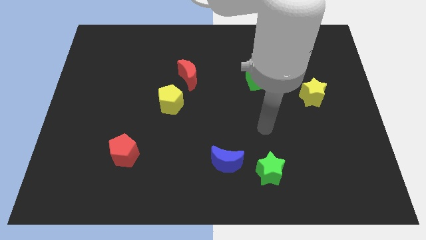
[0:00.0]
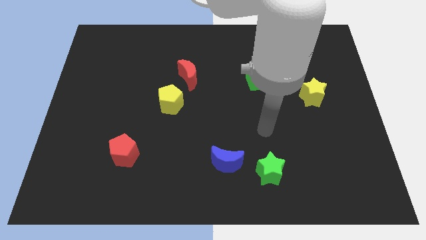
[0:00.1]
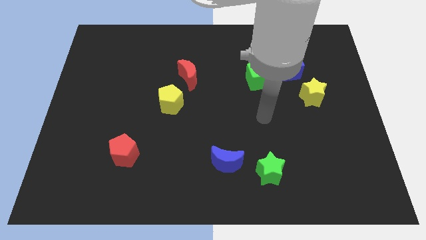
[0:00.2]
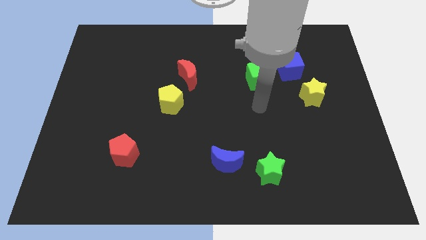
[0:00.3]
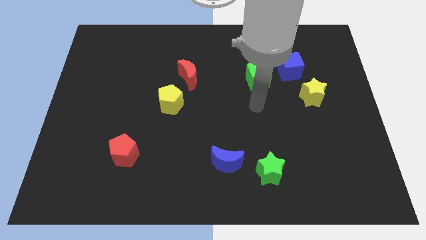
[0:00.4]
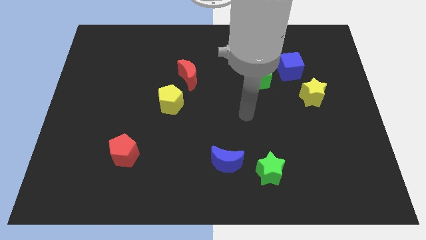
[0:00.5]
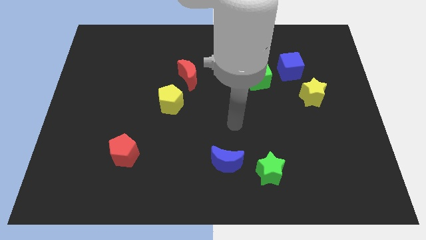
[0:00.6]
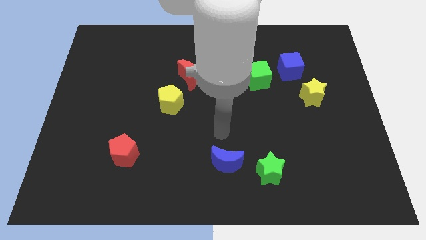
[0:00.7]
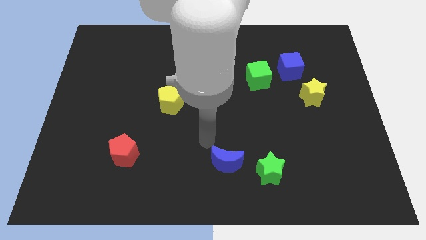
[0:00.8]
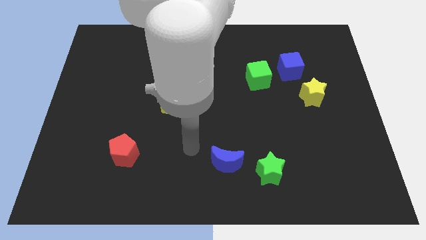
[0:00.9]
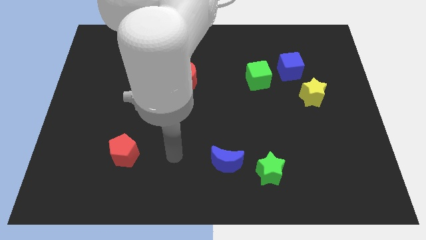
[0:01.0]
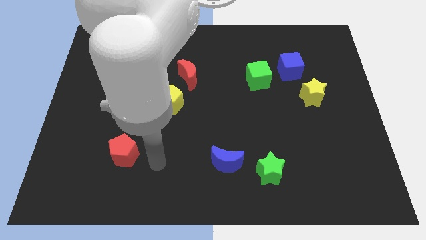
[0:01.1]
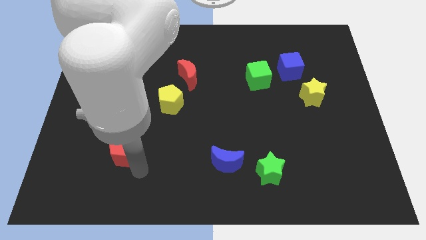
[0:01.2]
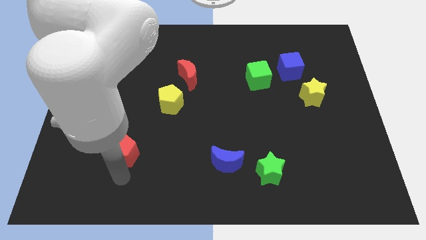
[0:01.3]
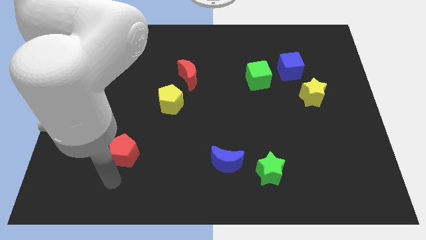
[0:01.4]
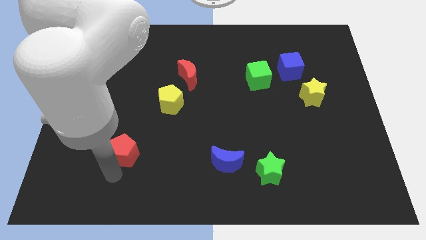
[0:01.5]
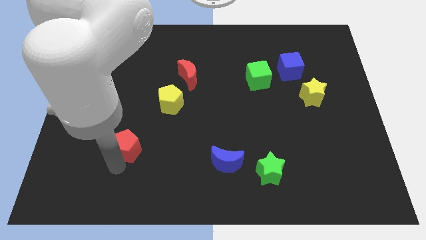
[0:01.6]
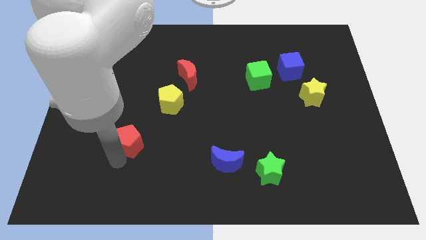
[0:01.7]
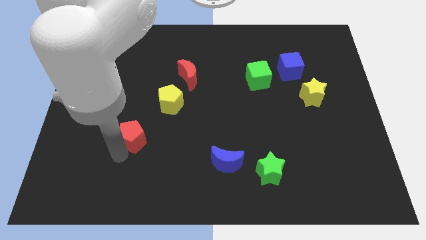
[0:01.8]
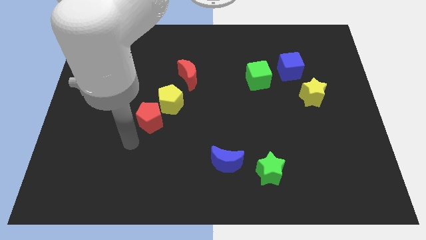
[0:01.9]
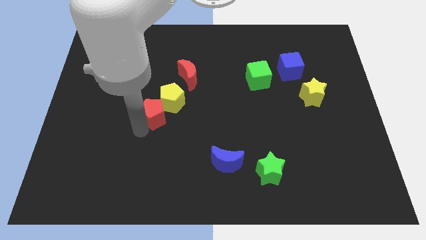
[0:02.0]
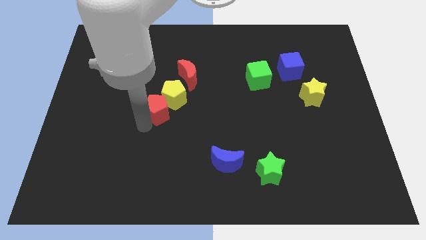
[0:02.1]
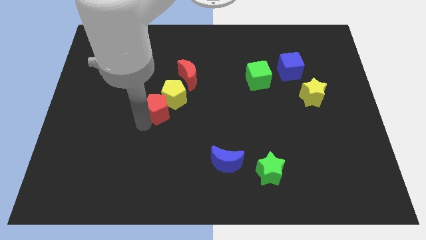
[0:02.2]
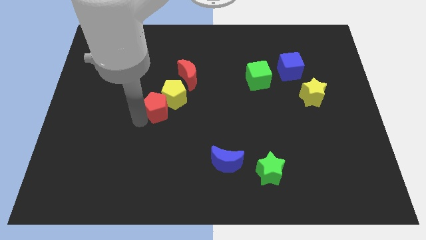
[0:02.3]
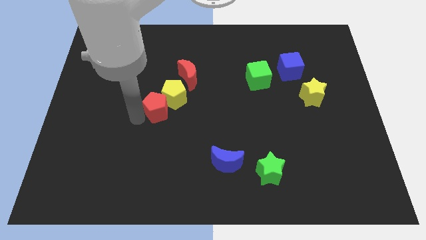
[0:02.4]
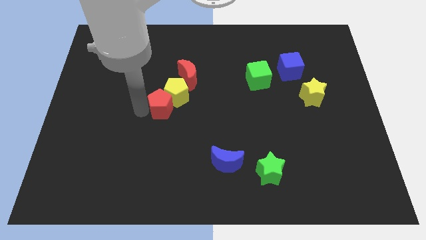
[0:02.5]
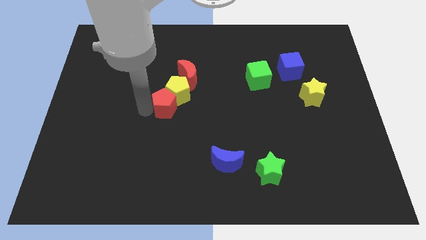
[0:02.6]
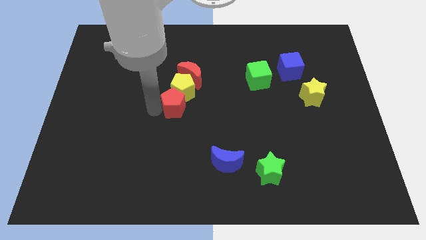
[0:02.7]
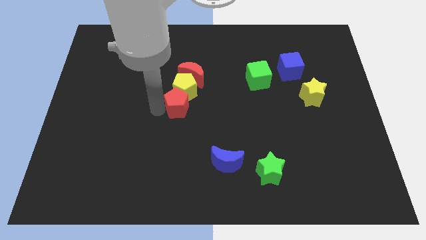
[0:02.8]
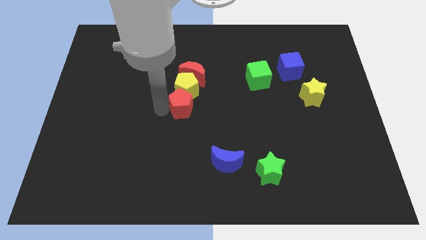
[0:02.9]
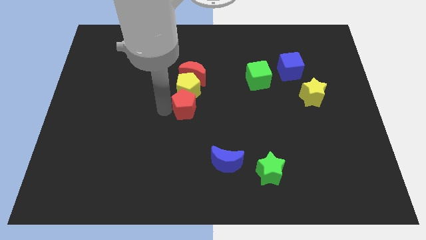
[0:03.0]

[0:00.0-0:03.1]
push the red pentagon into the yellow pentagon

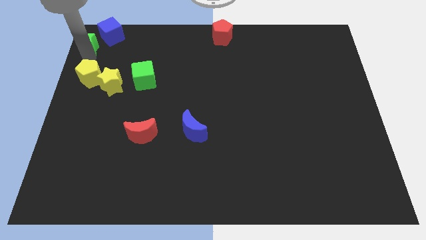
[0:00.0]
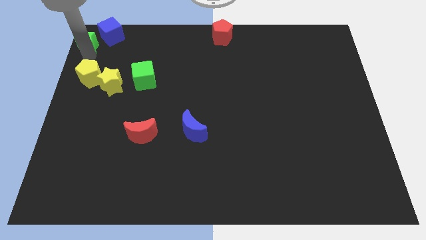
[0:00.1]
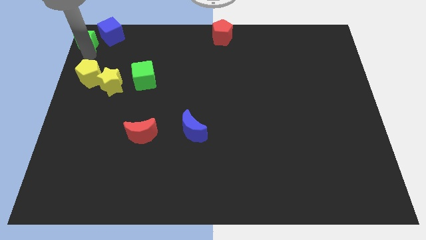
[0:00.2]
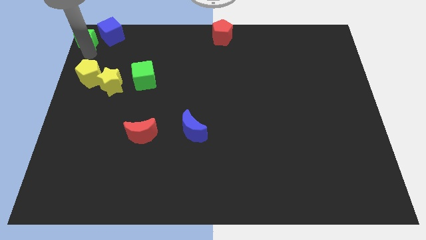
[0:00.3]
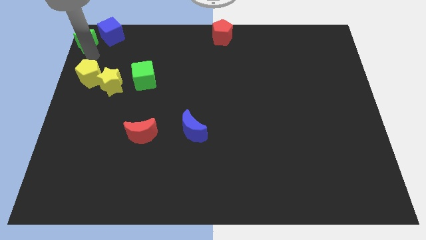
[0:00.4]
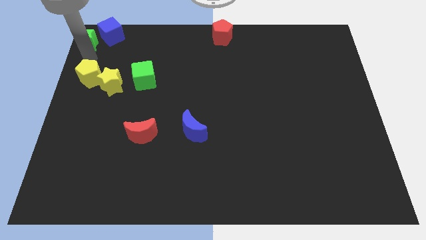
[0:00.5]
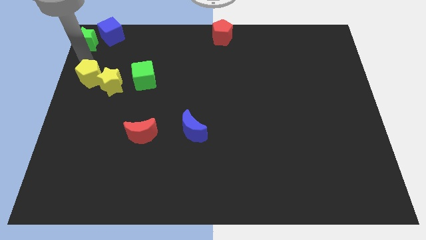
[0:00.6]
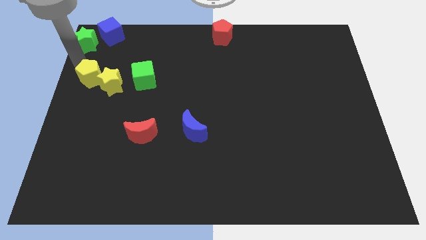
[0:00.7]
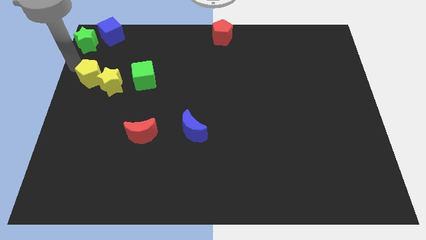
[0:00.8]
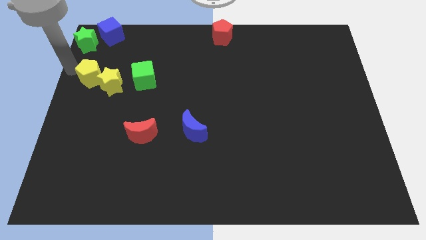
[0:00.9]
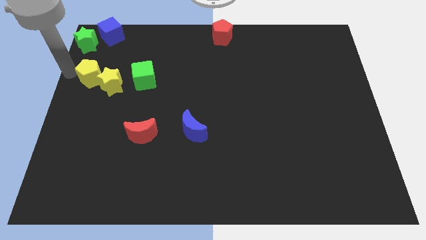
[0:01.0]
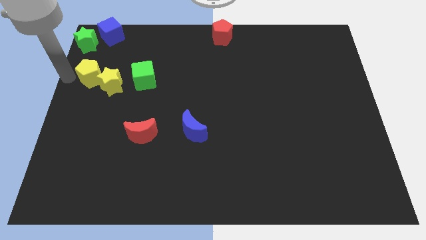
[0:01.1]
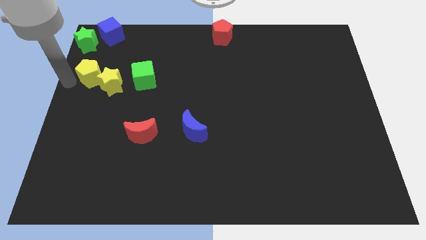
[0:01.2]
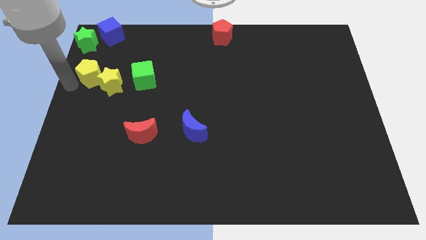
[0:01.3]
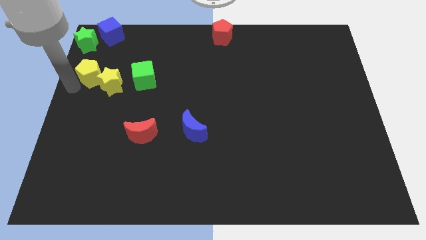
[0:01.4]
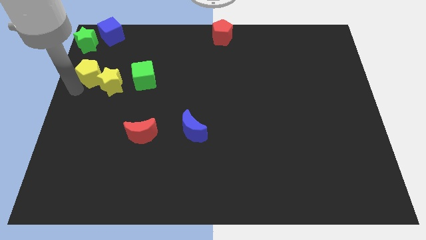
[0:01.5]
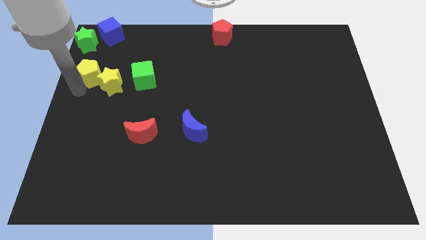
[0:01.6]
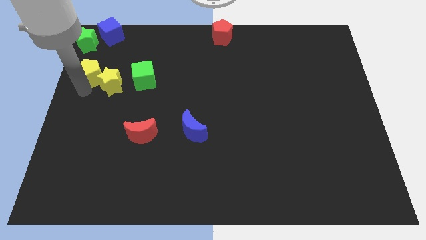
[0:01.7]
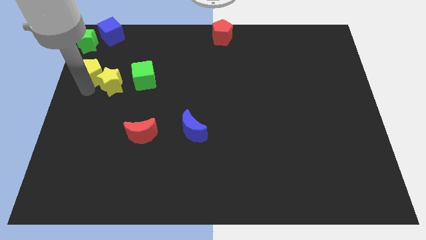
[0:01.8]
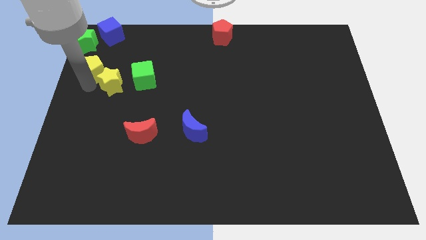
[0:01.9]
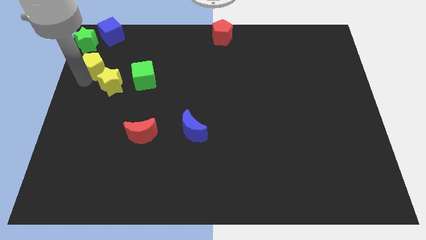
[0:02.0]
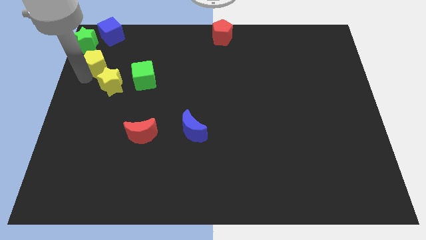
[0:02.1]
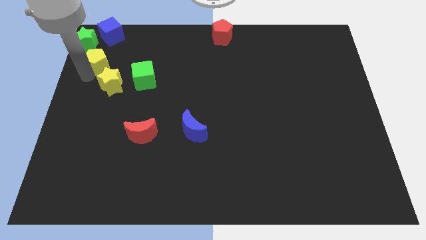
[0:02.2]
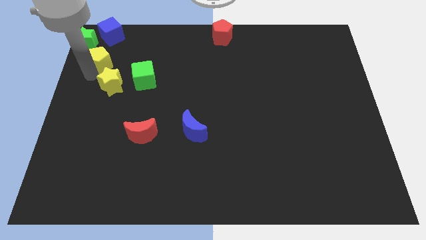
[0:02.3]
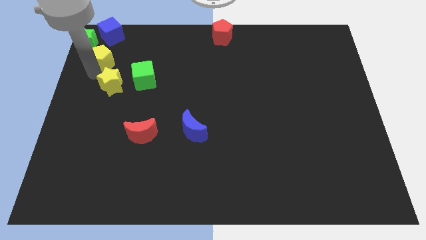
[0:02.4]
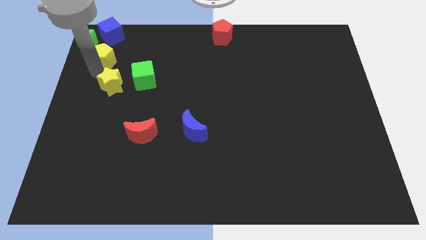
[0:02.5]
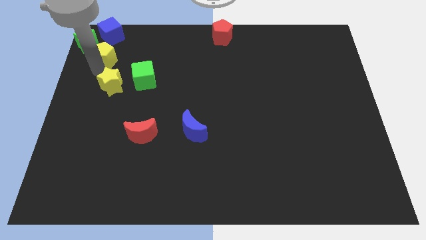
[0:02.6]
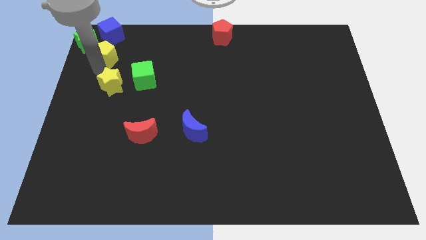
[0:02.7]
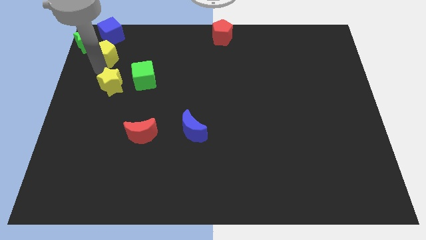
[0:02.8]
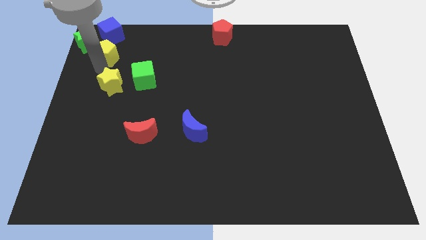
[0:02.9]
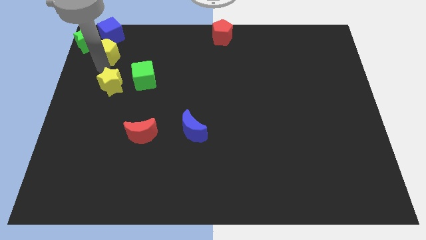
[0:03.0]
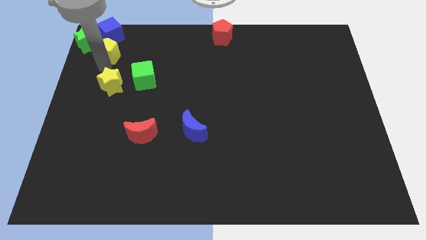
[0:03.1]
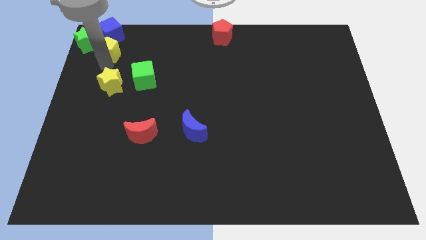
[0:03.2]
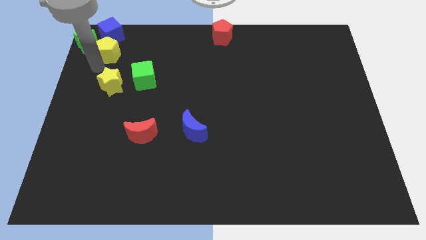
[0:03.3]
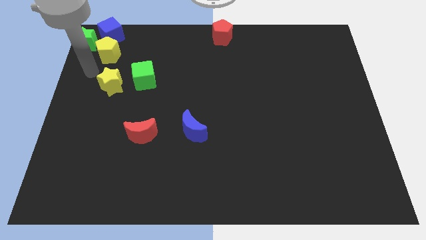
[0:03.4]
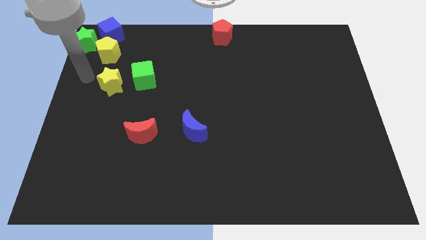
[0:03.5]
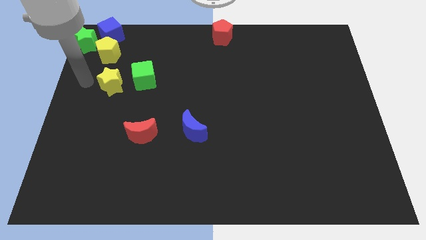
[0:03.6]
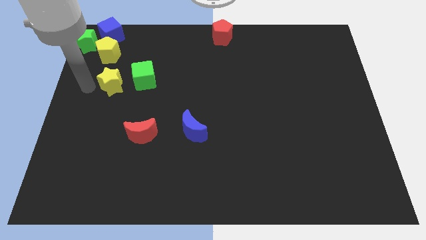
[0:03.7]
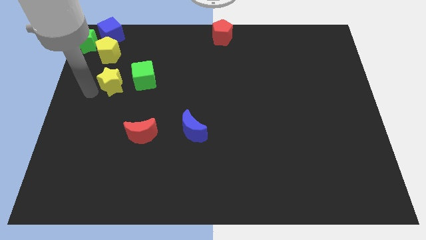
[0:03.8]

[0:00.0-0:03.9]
place yellow pentagon to the left bottom of the blue cube

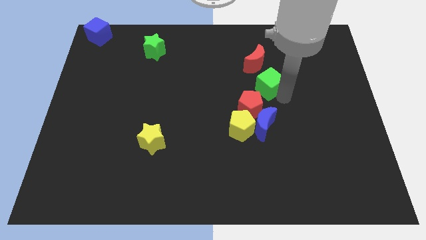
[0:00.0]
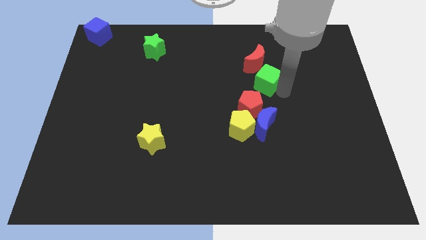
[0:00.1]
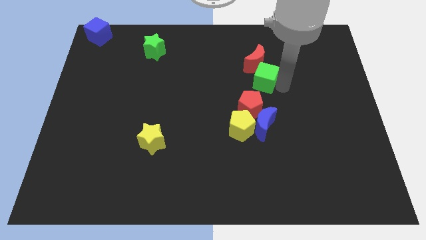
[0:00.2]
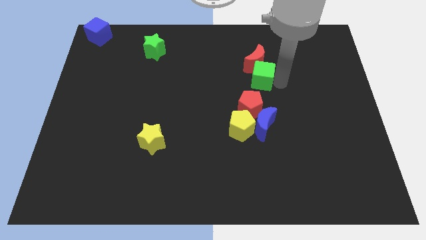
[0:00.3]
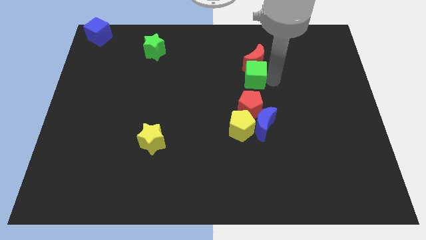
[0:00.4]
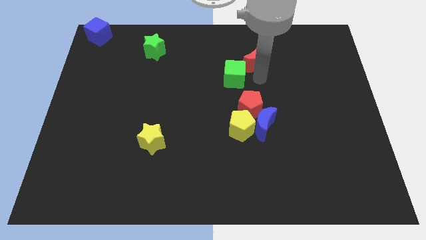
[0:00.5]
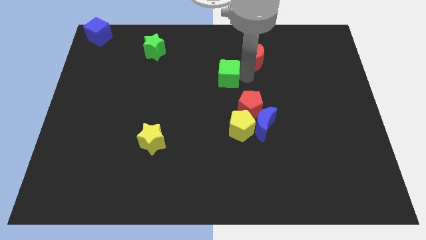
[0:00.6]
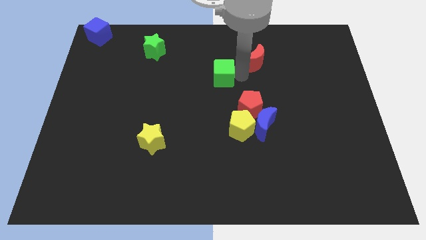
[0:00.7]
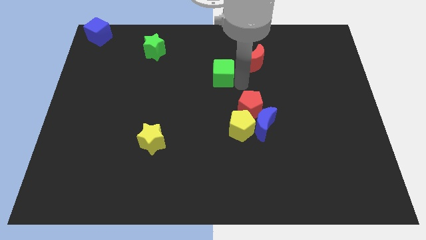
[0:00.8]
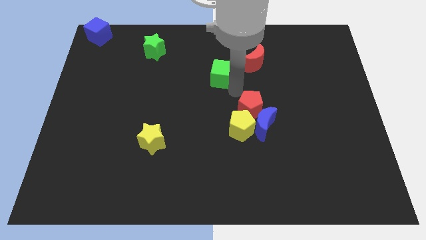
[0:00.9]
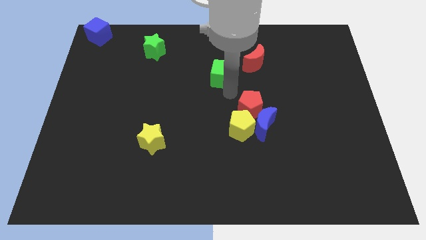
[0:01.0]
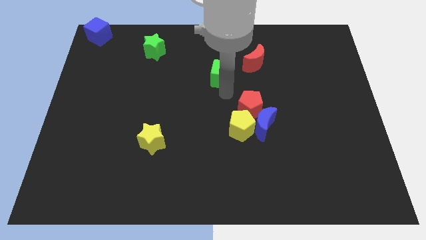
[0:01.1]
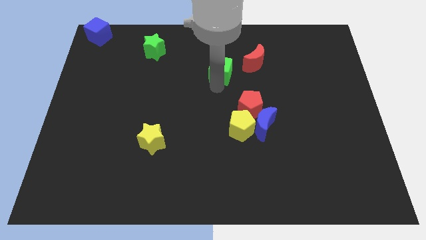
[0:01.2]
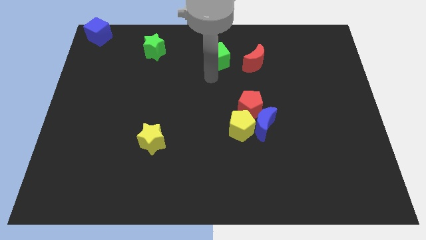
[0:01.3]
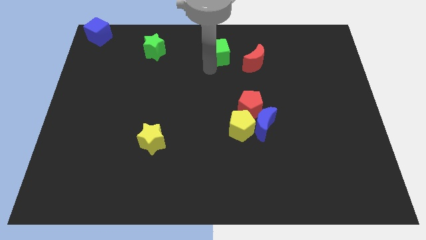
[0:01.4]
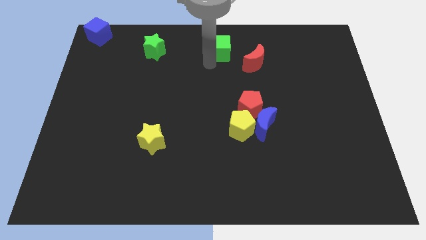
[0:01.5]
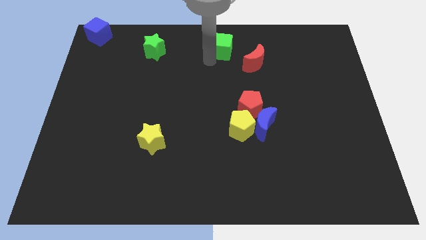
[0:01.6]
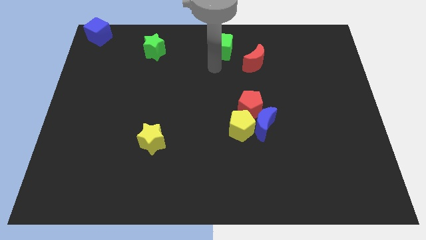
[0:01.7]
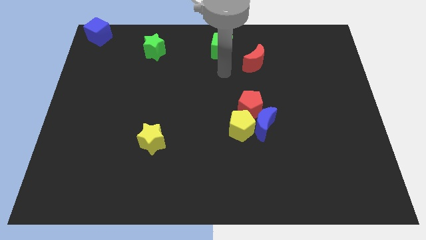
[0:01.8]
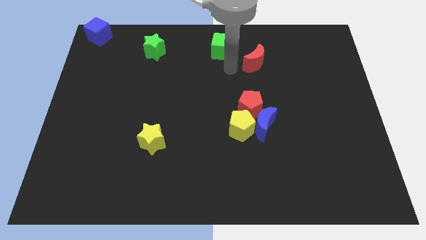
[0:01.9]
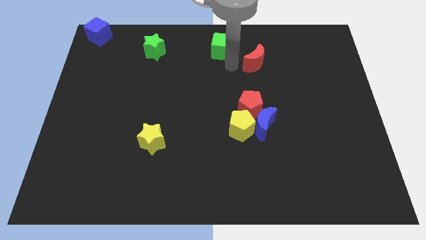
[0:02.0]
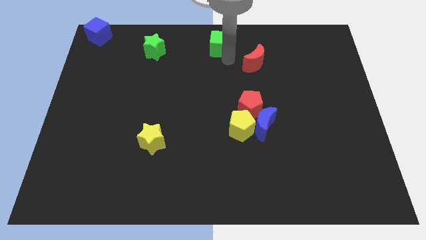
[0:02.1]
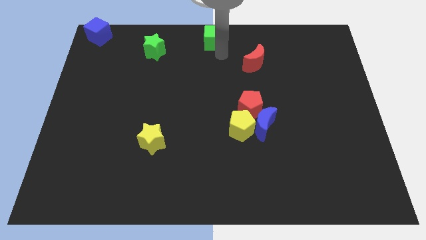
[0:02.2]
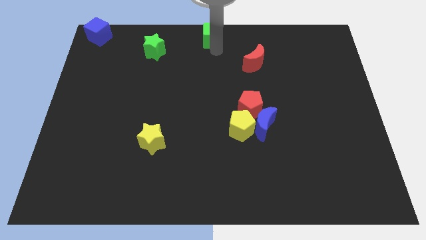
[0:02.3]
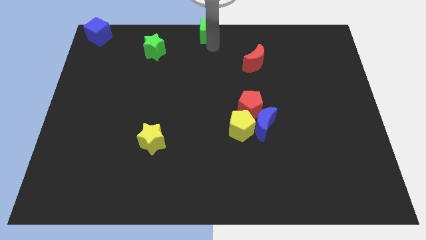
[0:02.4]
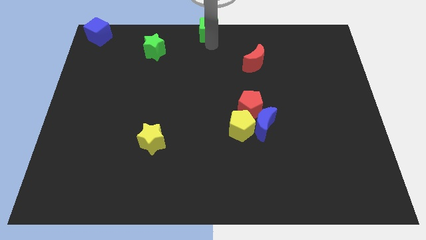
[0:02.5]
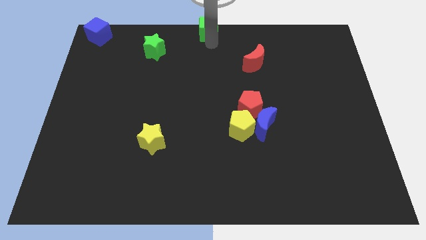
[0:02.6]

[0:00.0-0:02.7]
place the green cube at the top center of the board
